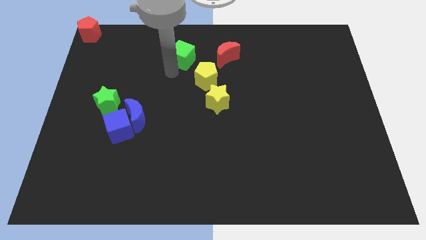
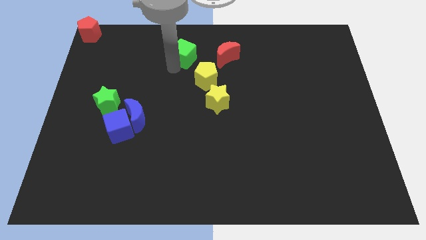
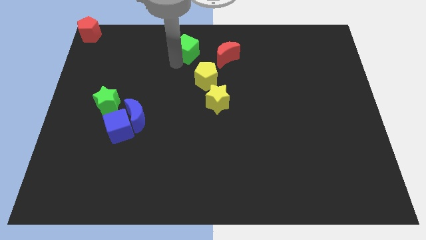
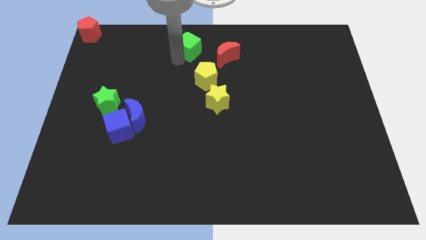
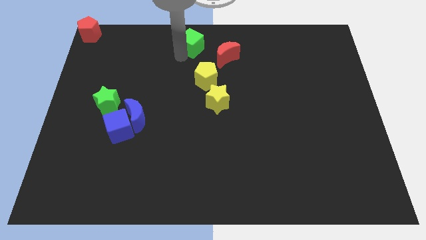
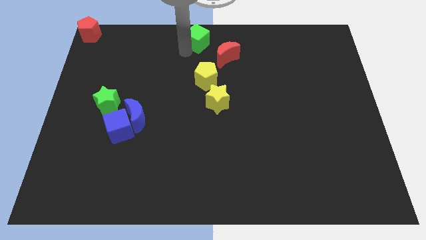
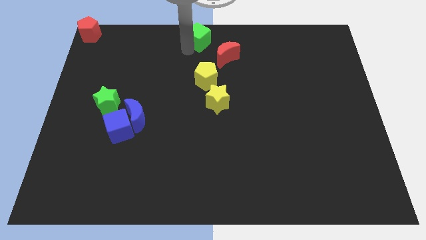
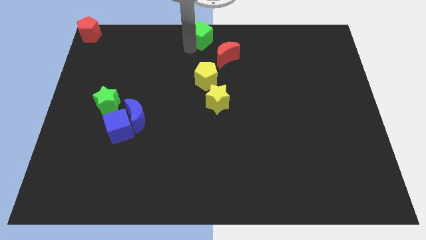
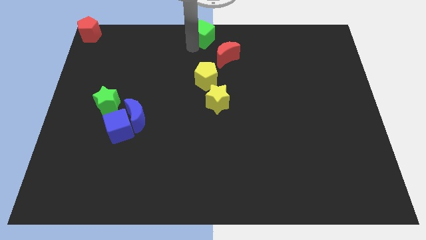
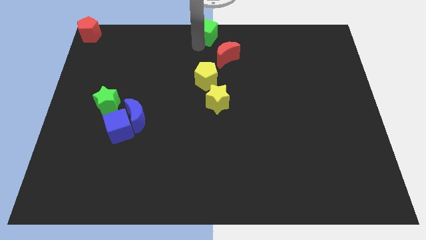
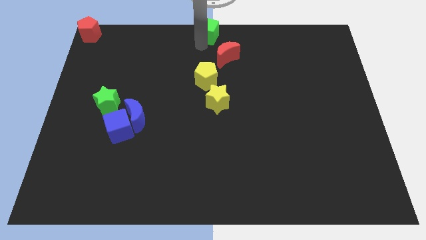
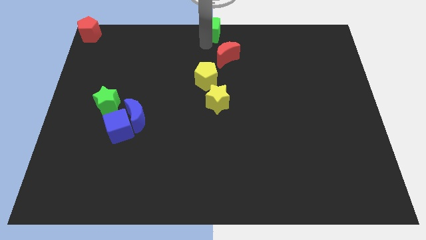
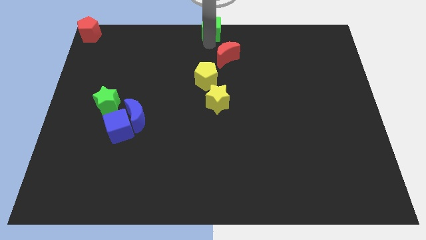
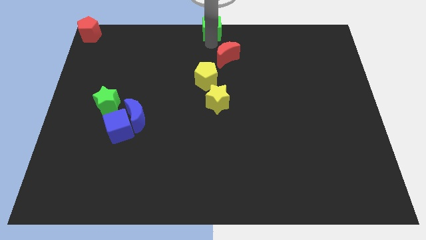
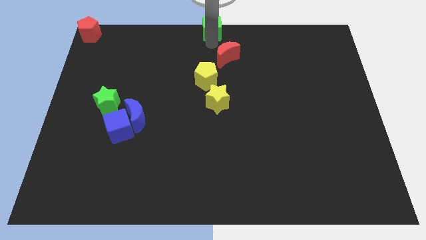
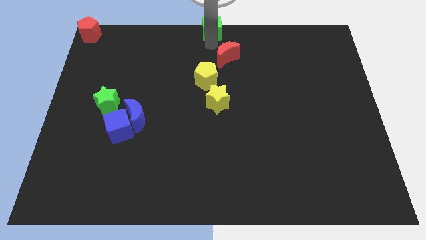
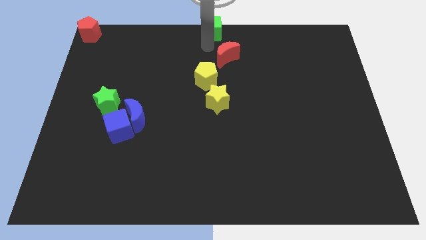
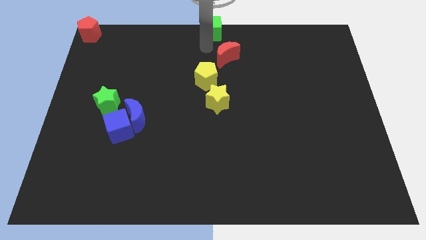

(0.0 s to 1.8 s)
place the green cube at the top center of the board

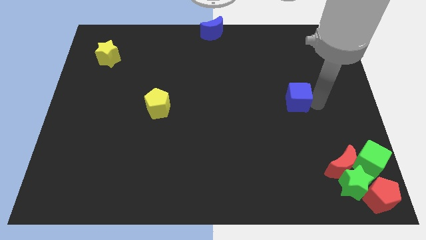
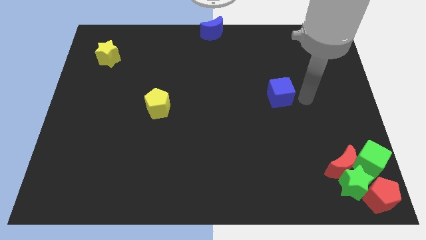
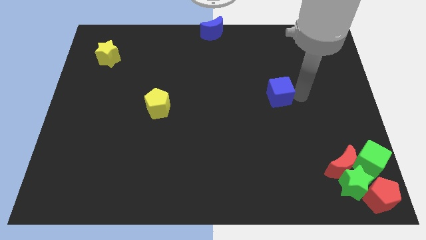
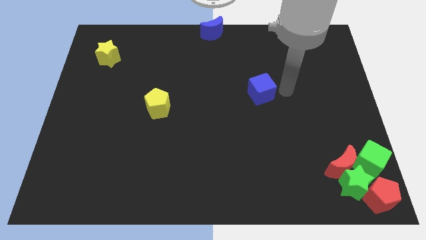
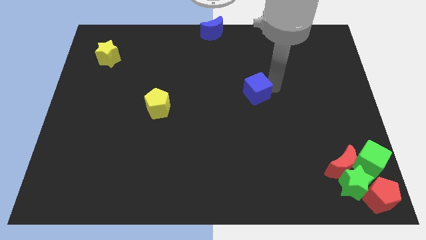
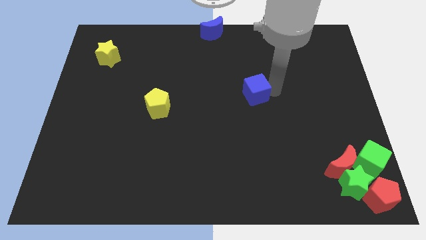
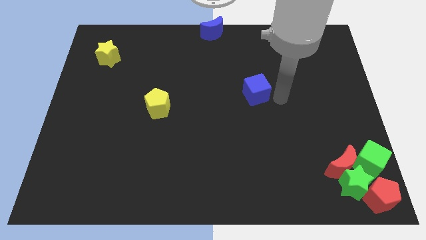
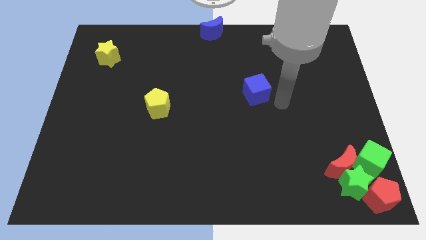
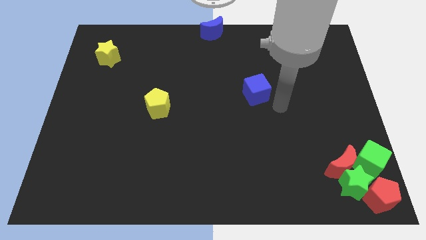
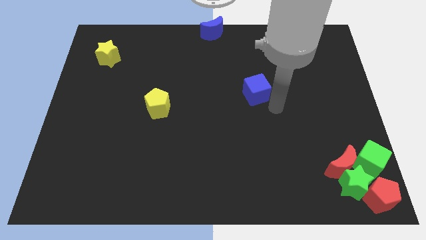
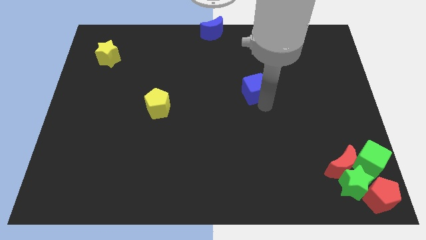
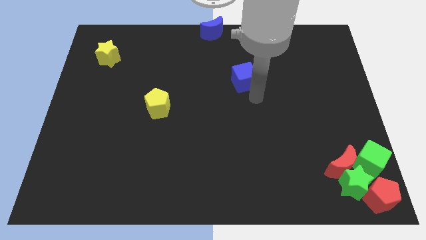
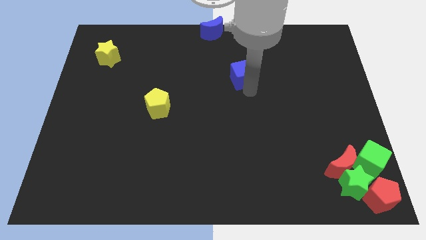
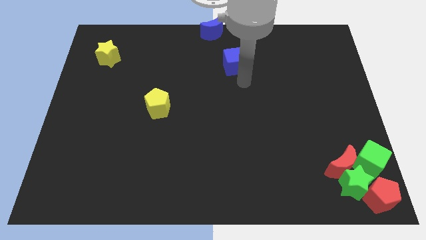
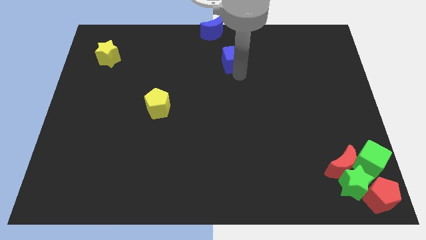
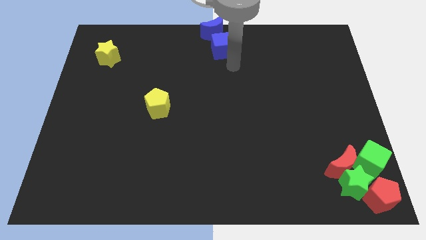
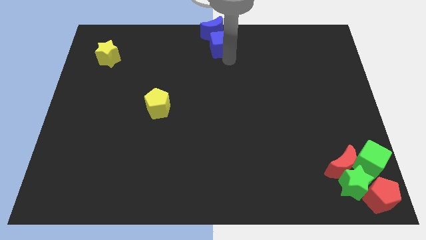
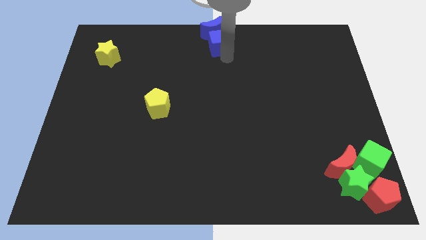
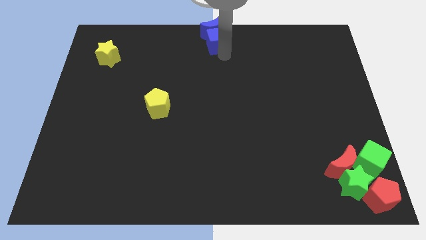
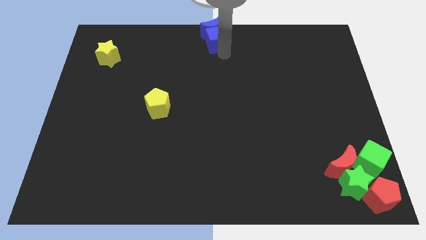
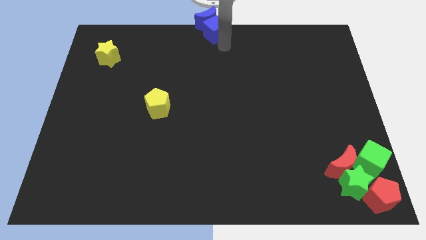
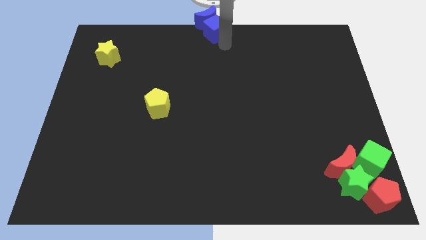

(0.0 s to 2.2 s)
push the blue cube into the blue crescent

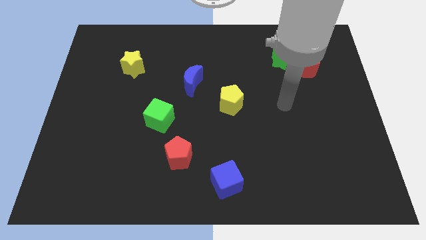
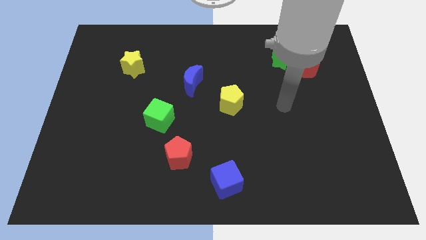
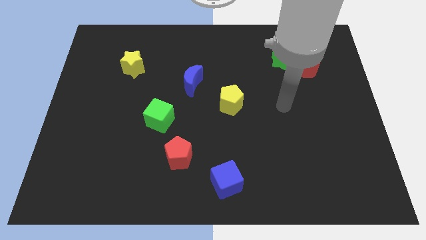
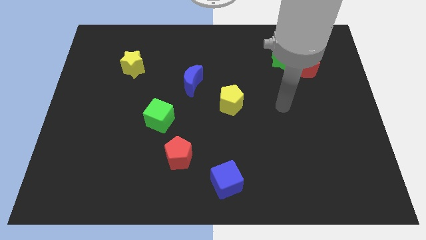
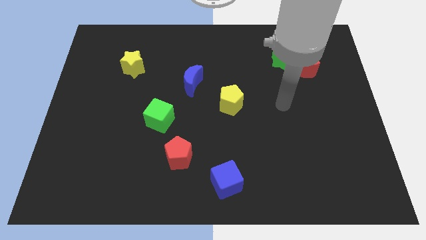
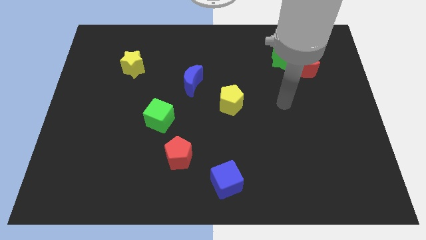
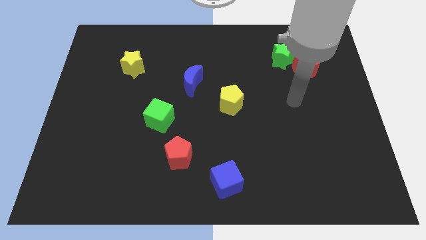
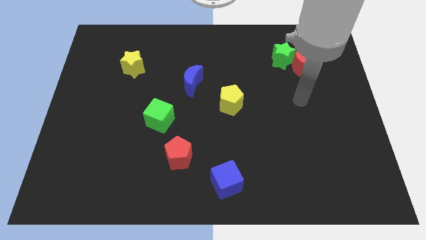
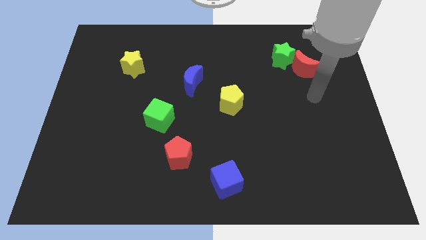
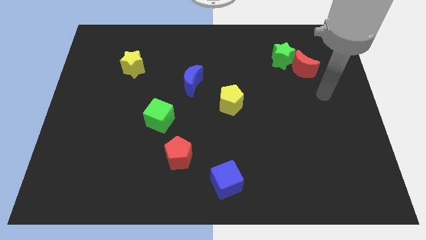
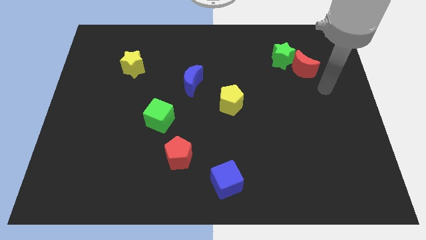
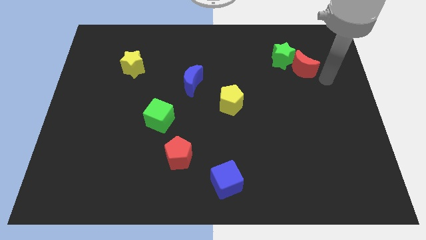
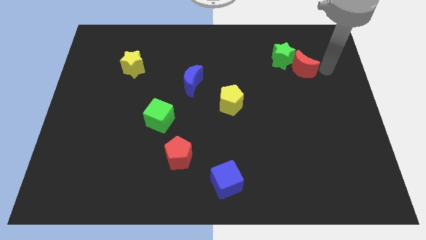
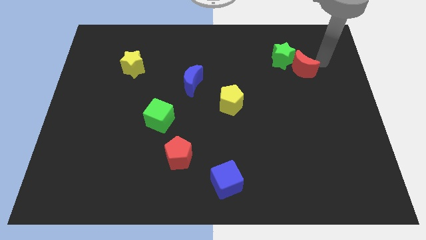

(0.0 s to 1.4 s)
move your arm to the right side of the red moon

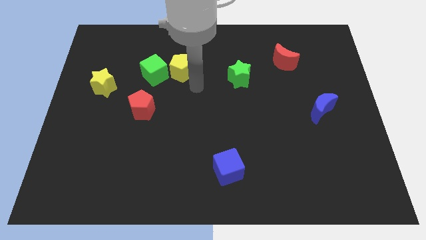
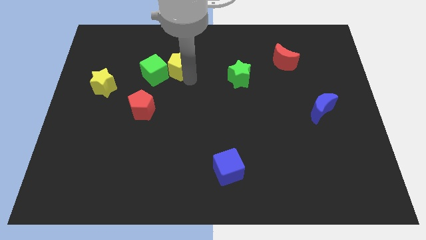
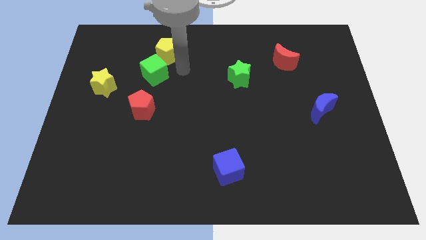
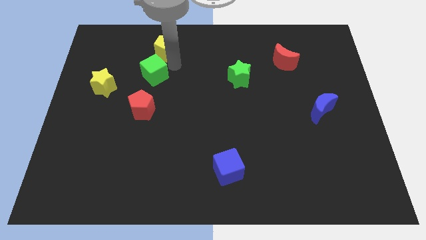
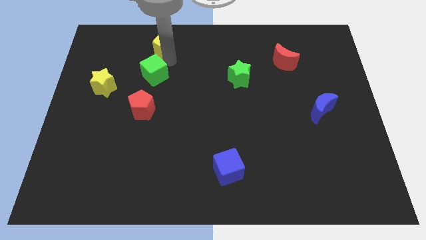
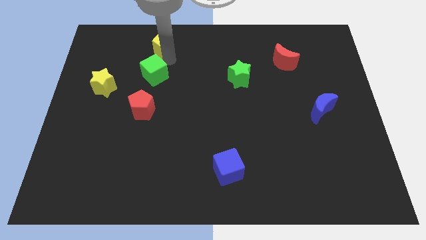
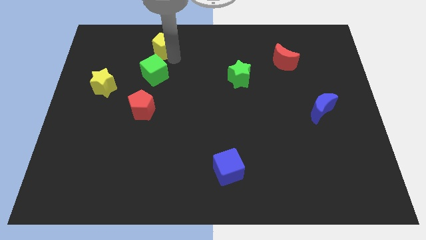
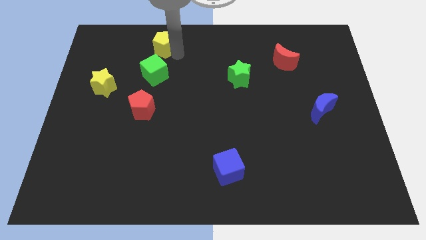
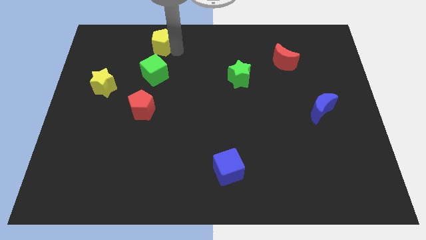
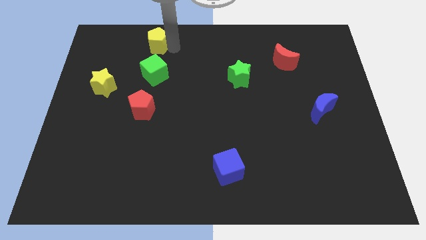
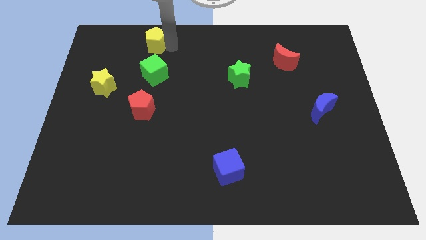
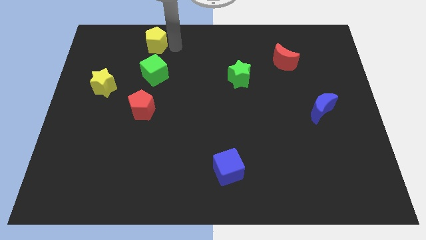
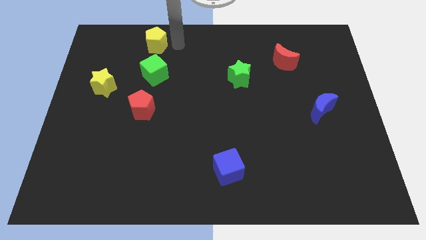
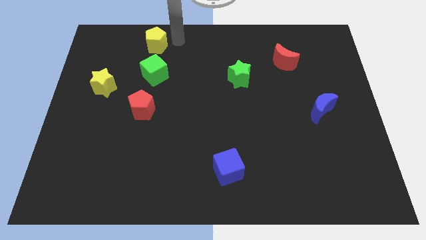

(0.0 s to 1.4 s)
separate the green cube and yellow pentagon

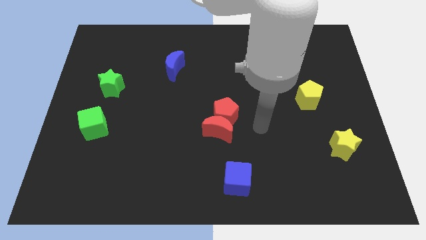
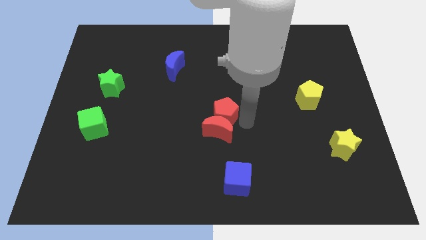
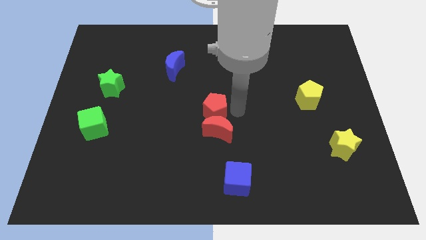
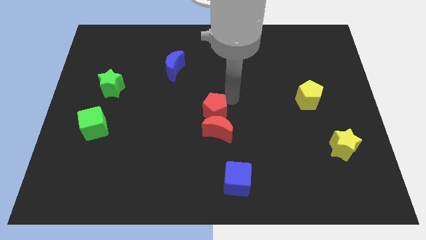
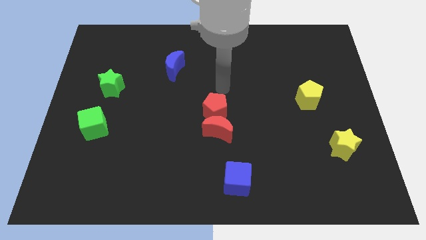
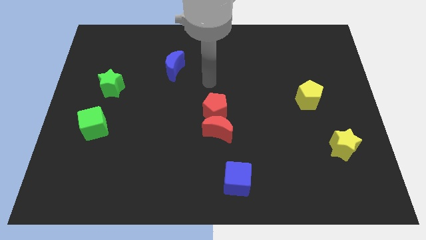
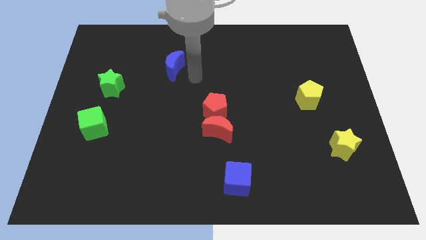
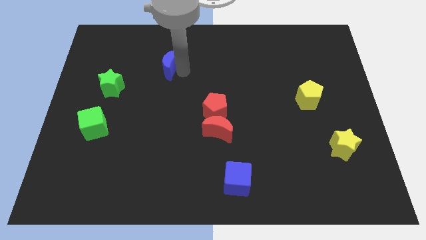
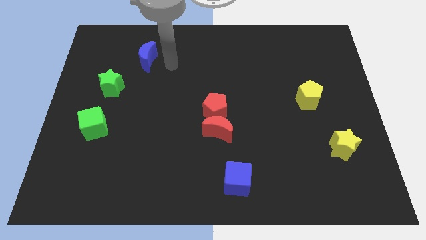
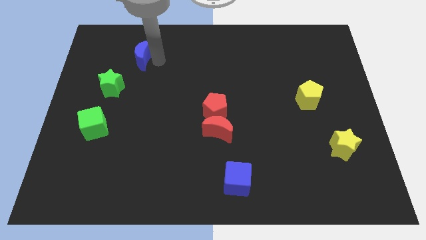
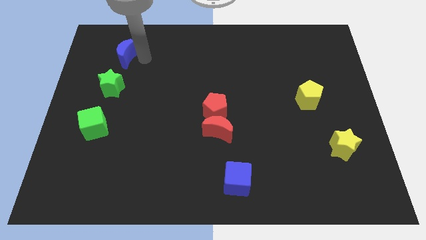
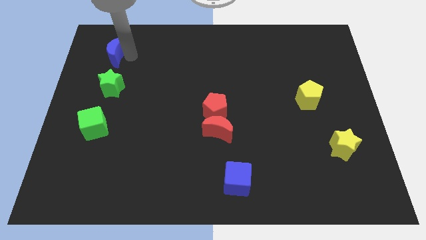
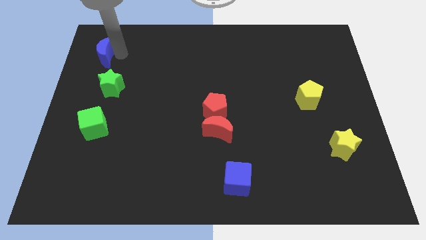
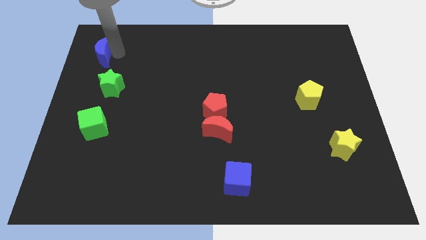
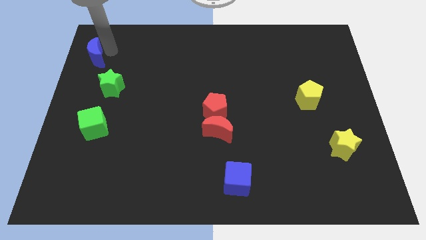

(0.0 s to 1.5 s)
push blue crescent to the left

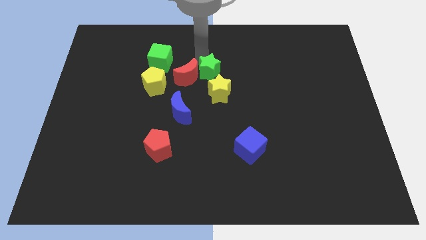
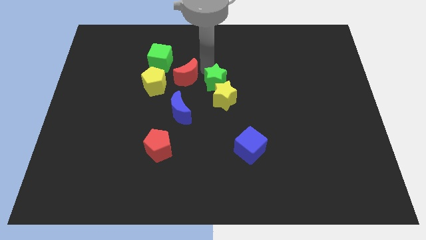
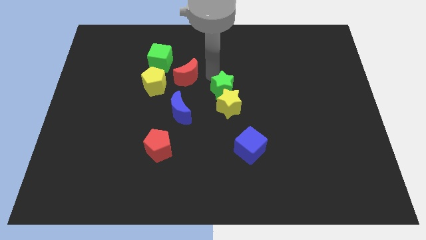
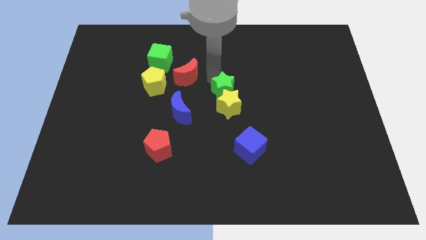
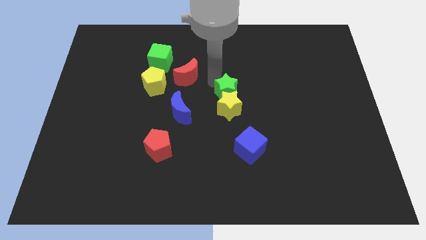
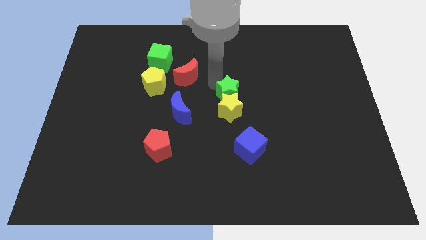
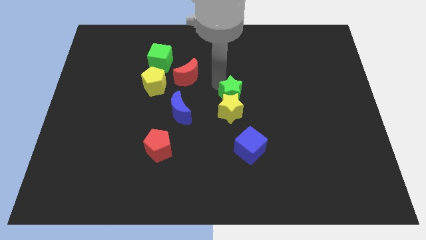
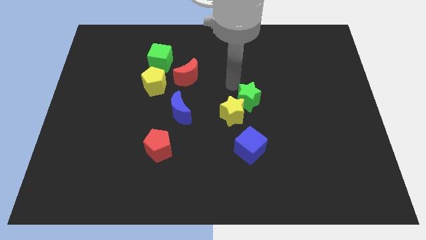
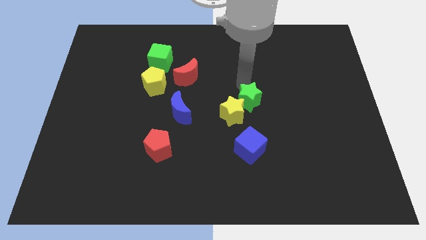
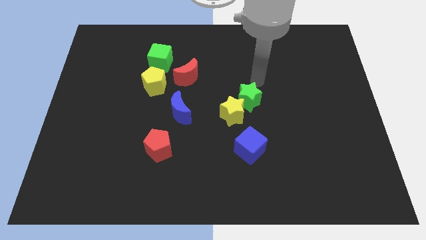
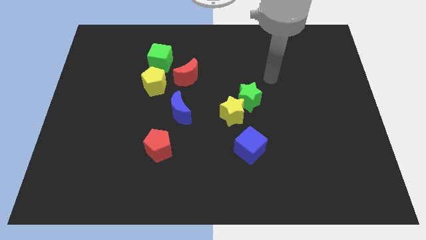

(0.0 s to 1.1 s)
push the green star into the yellow star from the top
